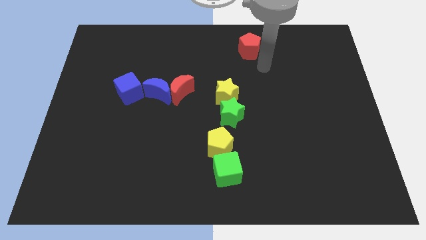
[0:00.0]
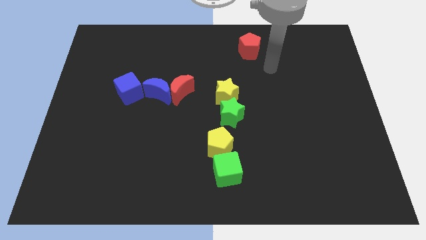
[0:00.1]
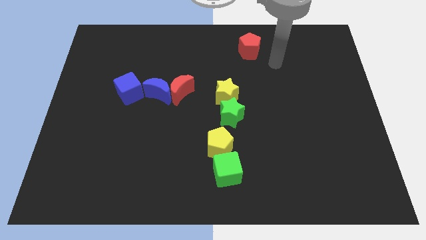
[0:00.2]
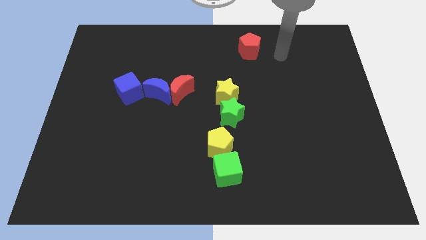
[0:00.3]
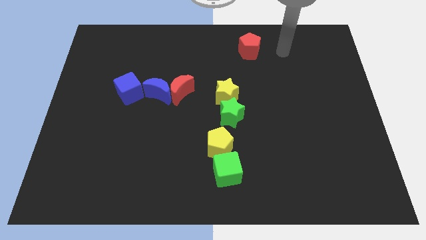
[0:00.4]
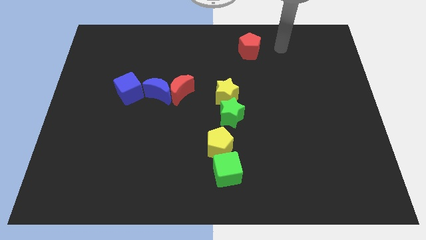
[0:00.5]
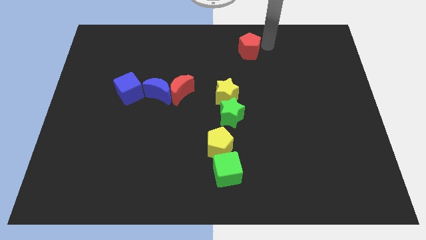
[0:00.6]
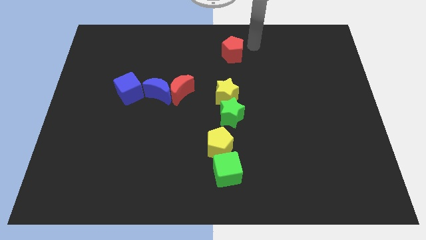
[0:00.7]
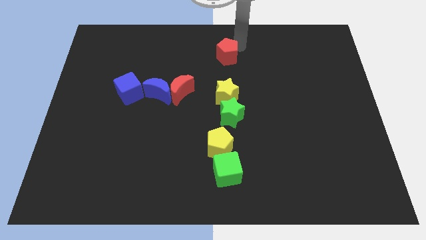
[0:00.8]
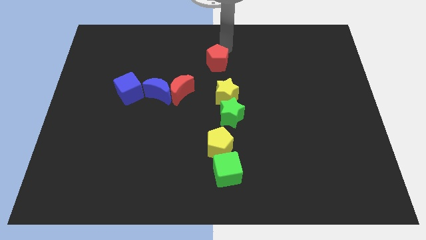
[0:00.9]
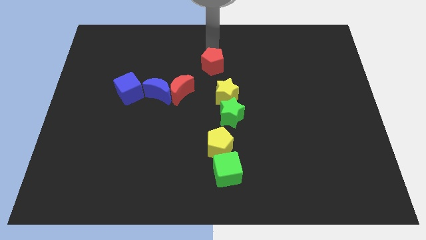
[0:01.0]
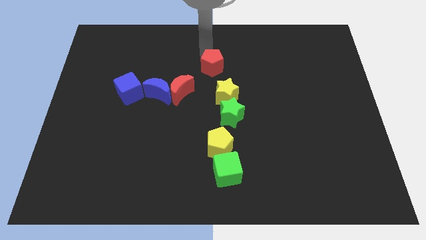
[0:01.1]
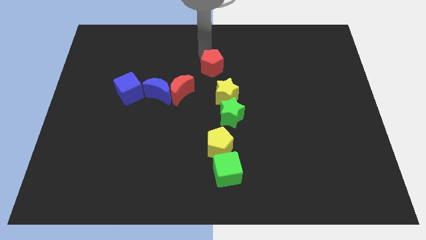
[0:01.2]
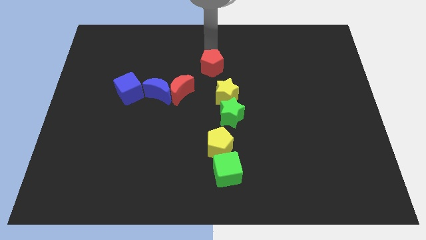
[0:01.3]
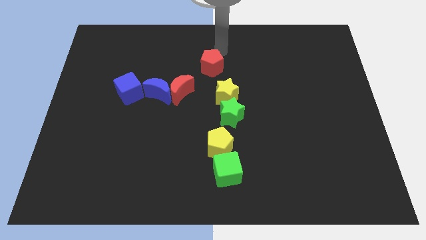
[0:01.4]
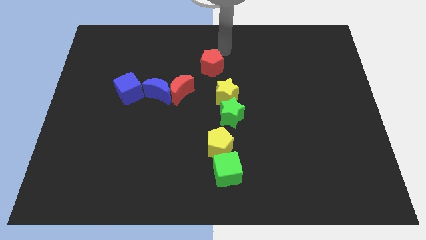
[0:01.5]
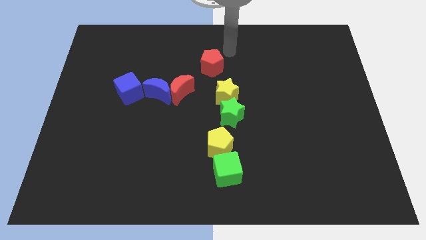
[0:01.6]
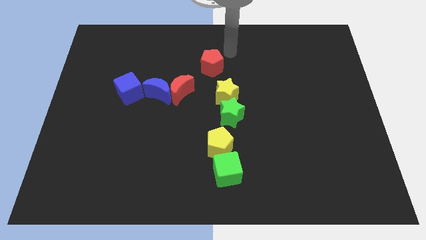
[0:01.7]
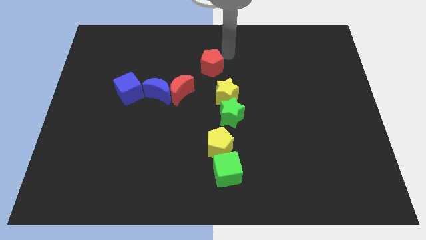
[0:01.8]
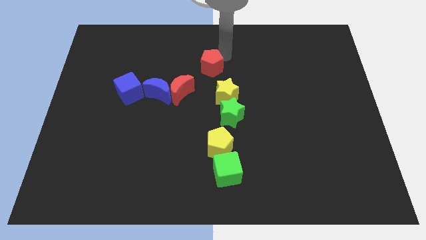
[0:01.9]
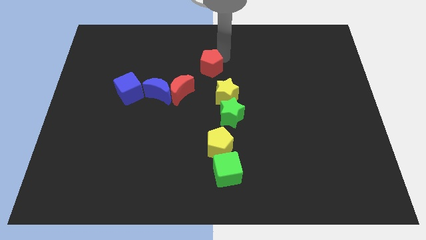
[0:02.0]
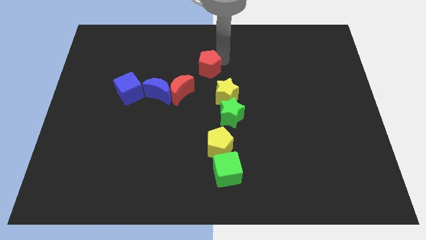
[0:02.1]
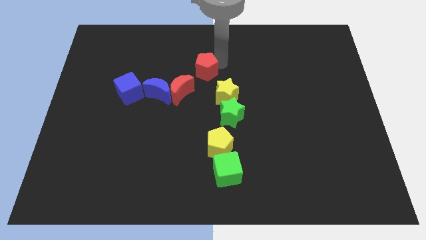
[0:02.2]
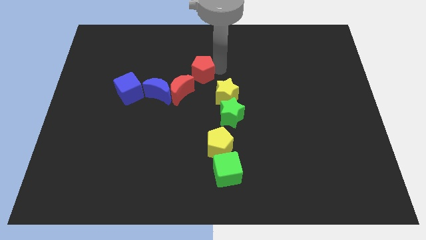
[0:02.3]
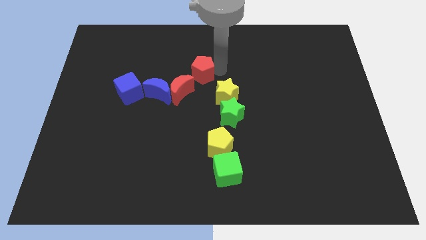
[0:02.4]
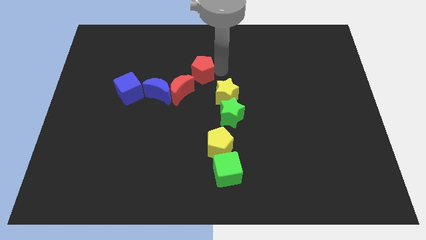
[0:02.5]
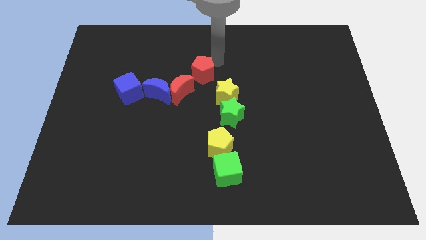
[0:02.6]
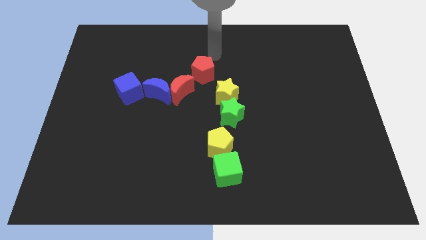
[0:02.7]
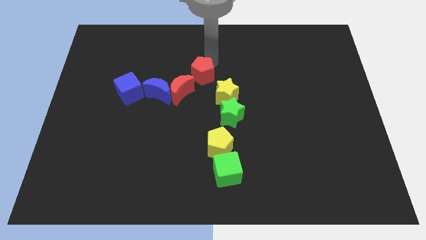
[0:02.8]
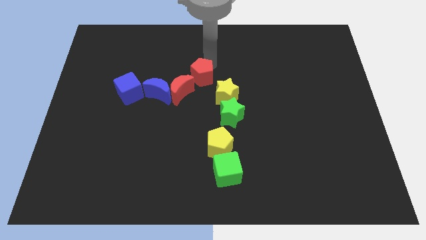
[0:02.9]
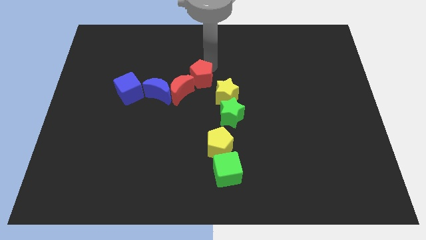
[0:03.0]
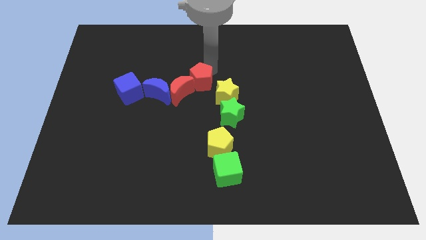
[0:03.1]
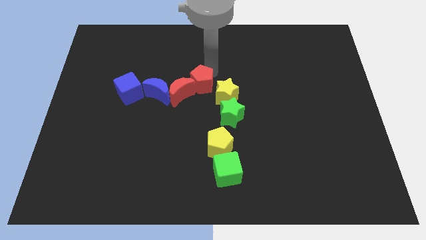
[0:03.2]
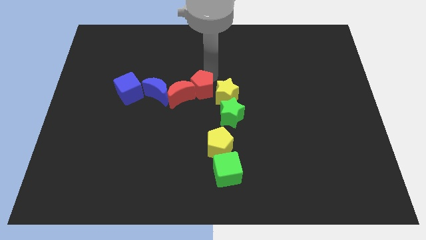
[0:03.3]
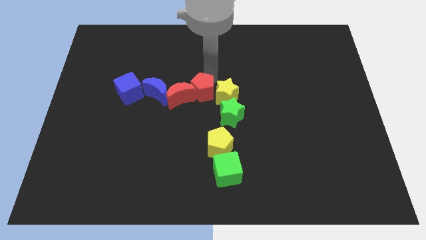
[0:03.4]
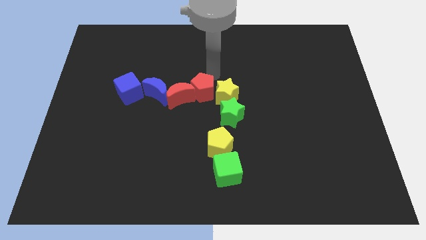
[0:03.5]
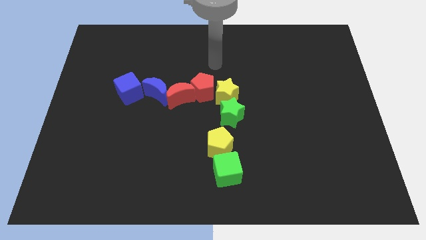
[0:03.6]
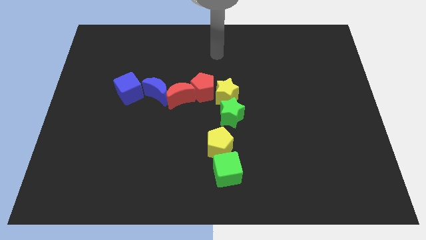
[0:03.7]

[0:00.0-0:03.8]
push the red pentagon in between the red crescent and the yellow star

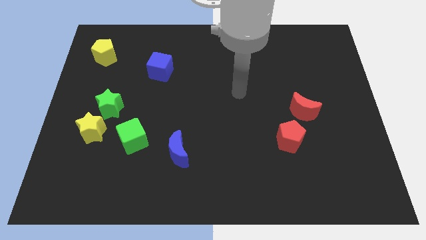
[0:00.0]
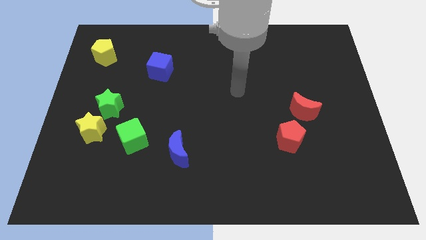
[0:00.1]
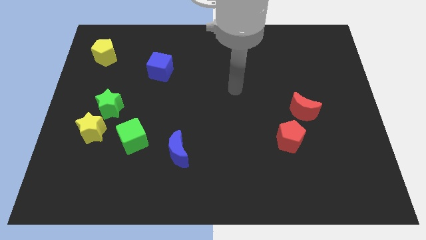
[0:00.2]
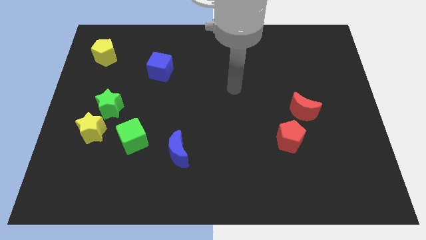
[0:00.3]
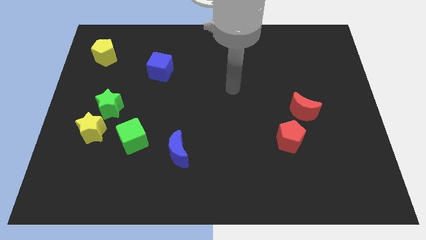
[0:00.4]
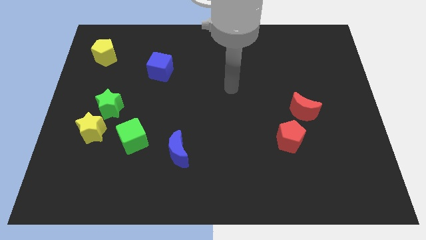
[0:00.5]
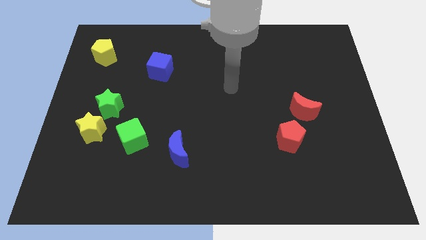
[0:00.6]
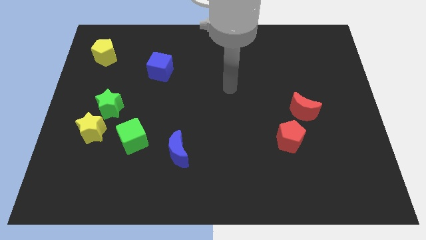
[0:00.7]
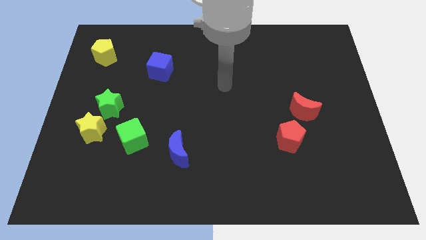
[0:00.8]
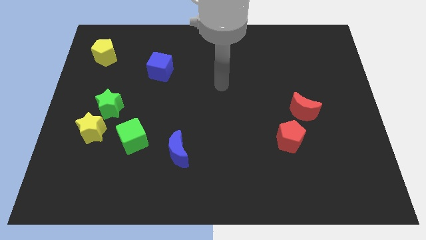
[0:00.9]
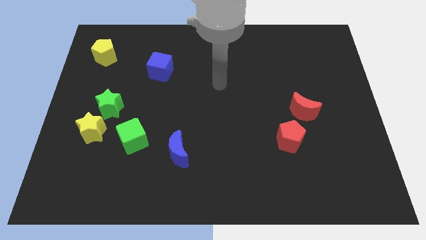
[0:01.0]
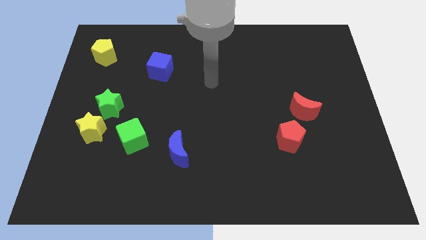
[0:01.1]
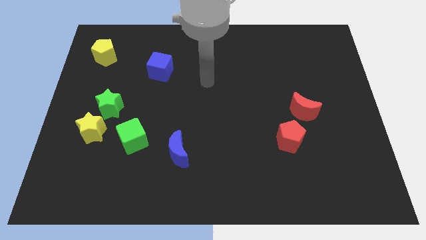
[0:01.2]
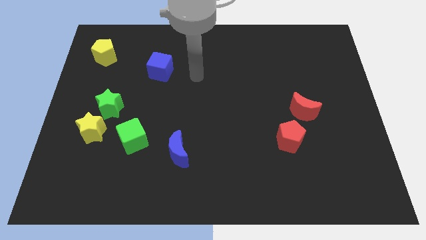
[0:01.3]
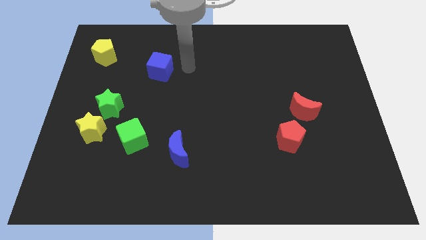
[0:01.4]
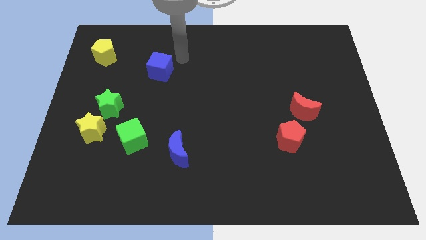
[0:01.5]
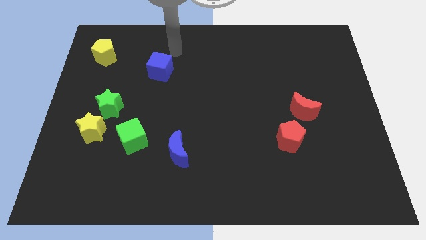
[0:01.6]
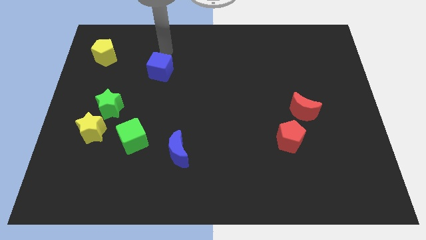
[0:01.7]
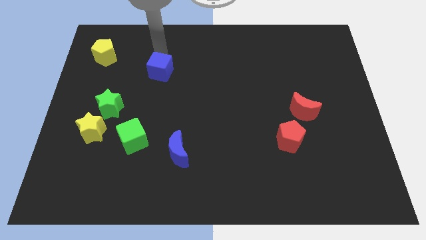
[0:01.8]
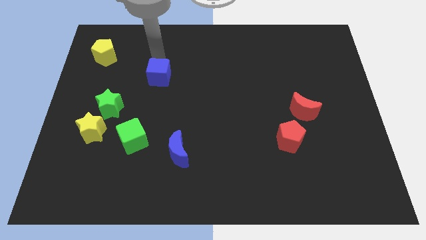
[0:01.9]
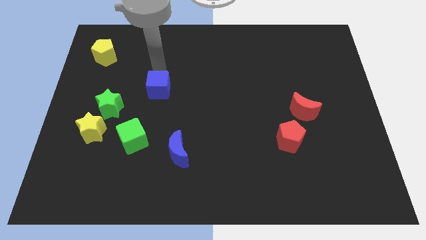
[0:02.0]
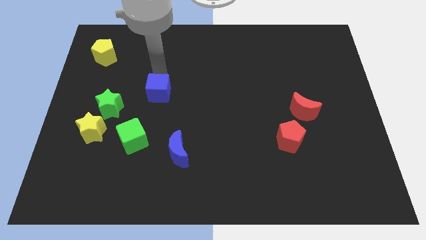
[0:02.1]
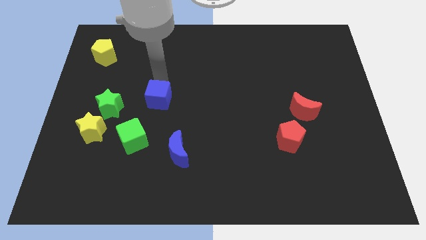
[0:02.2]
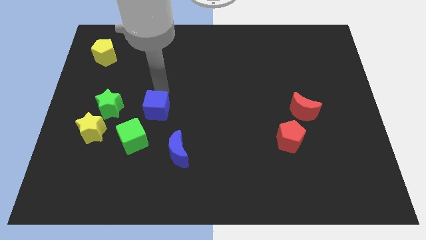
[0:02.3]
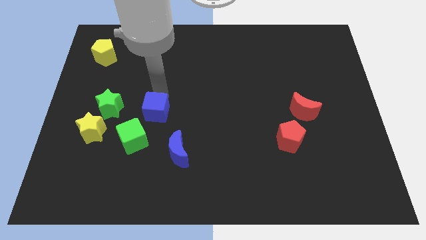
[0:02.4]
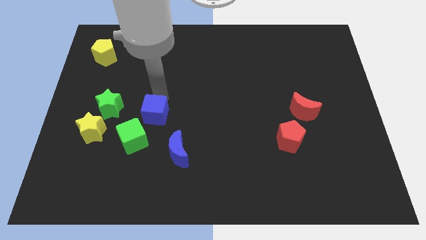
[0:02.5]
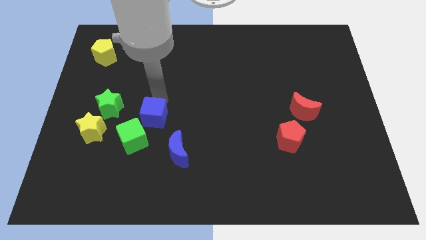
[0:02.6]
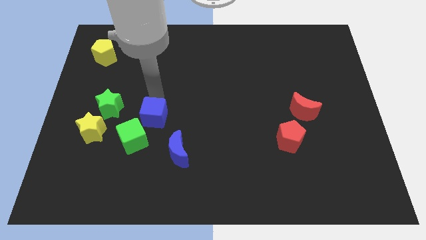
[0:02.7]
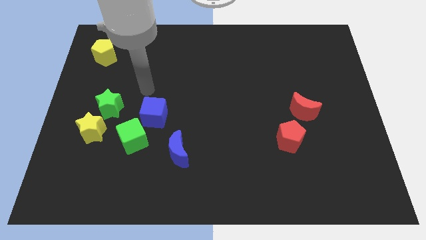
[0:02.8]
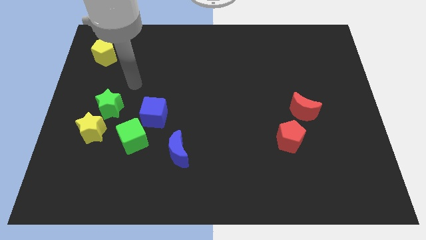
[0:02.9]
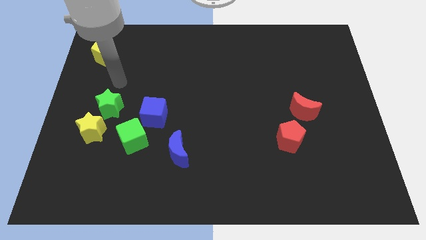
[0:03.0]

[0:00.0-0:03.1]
push the blue cube to the right side of the green star

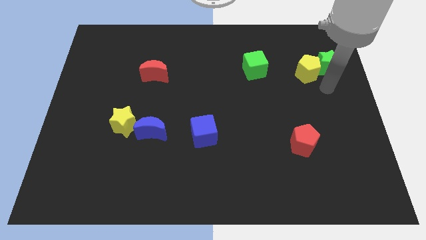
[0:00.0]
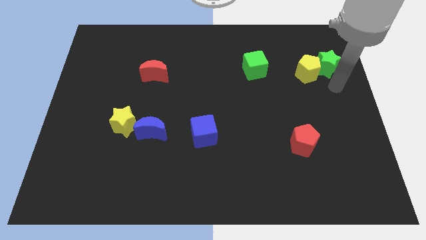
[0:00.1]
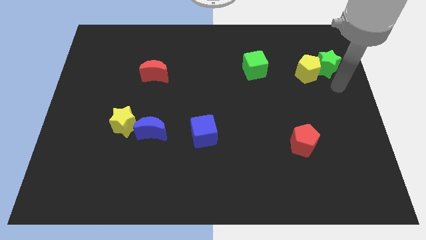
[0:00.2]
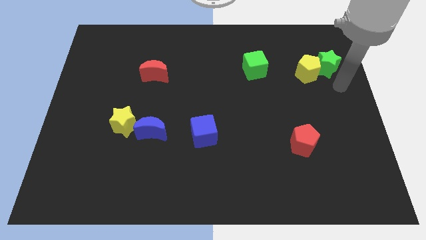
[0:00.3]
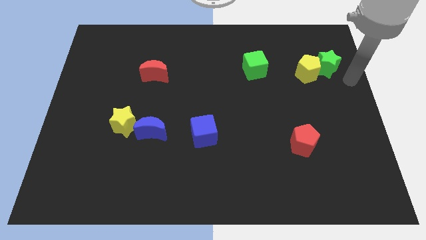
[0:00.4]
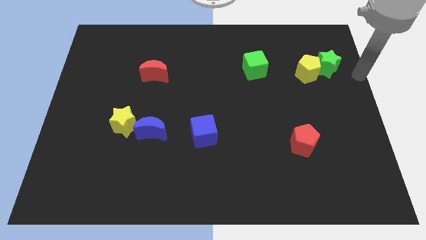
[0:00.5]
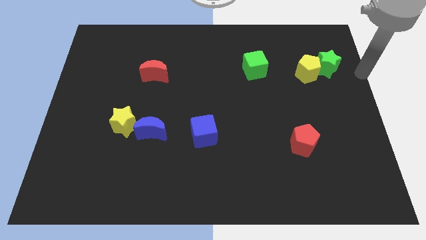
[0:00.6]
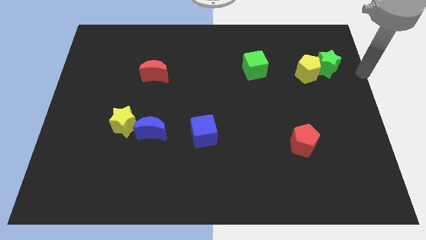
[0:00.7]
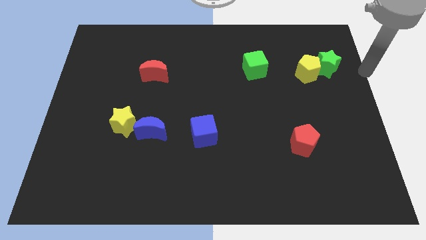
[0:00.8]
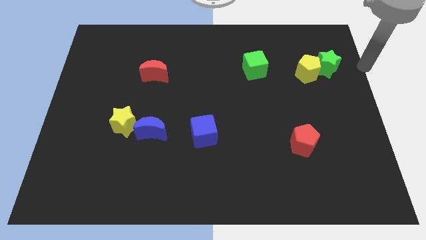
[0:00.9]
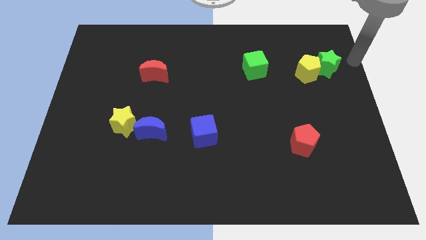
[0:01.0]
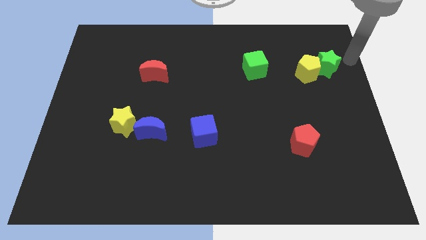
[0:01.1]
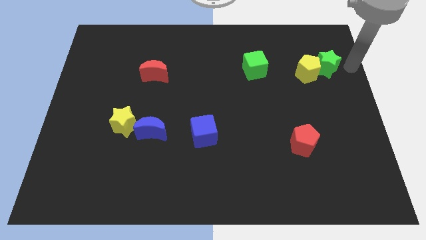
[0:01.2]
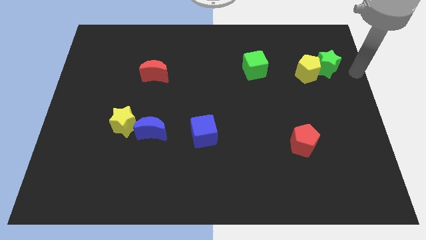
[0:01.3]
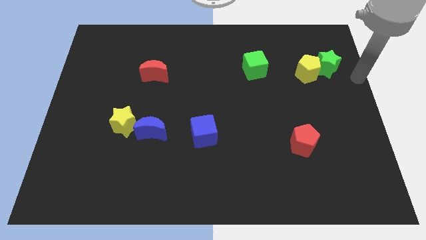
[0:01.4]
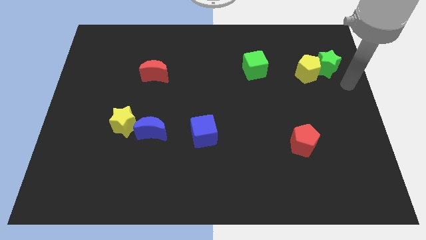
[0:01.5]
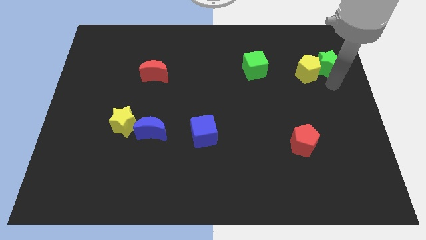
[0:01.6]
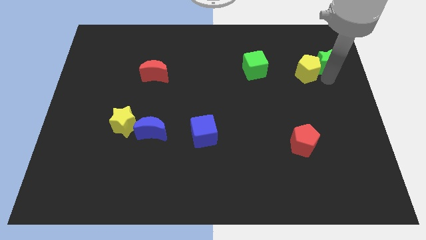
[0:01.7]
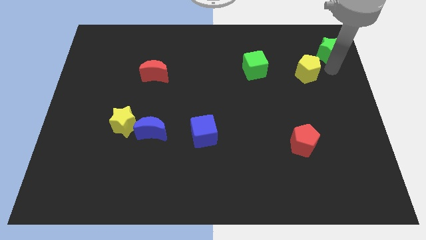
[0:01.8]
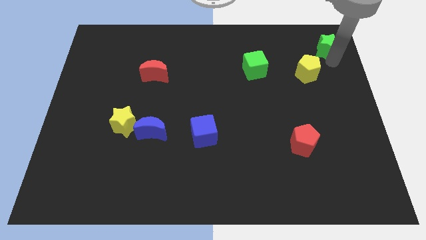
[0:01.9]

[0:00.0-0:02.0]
slightly push the green star towards the top right corner of the board
